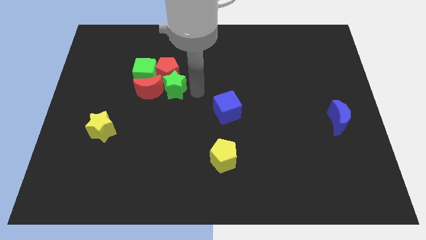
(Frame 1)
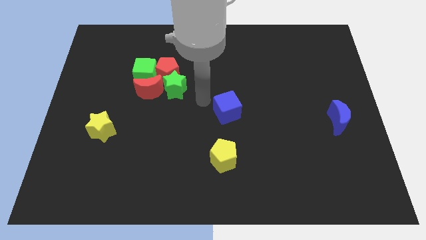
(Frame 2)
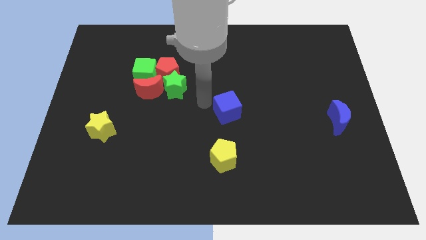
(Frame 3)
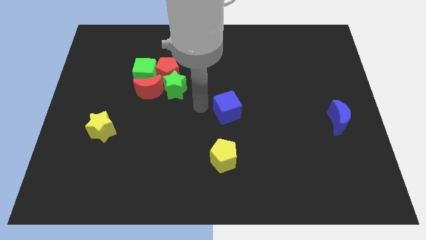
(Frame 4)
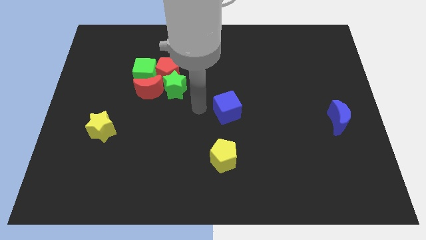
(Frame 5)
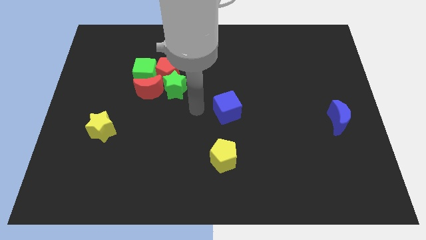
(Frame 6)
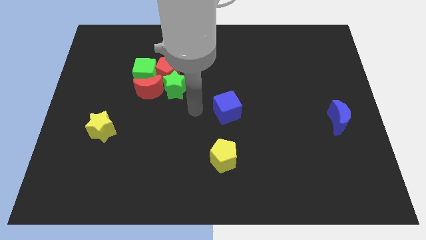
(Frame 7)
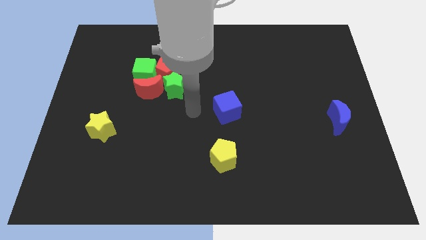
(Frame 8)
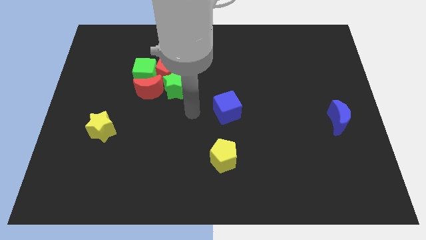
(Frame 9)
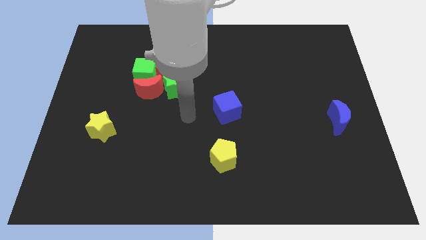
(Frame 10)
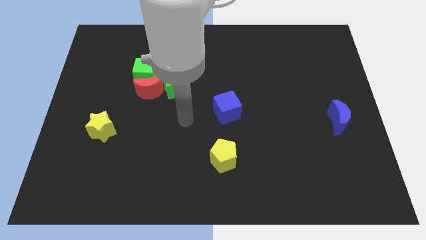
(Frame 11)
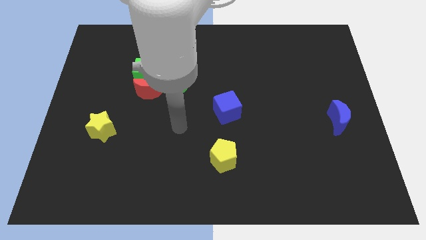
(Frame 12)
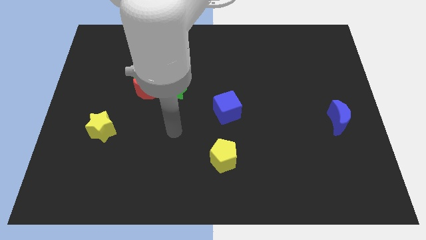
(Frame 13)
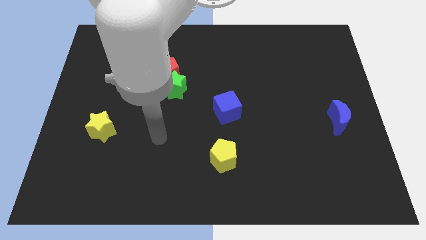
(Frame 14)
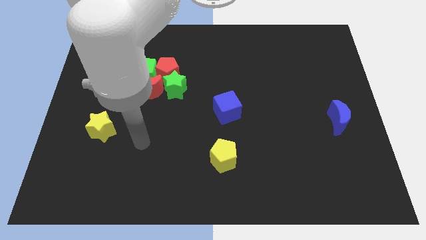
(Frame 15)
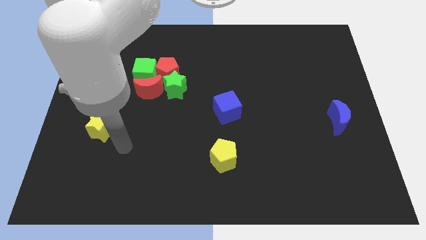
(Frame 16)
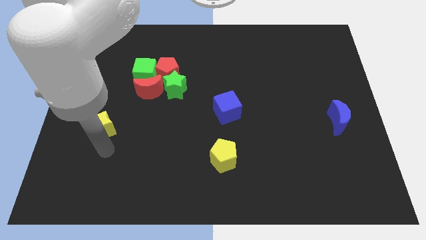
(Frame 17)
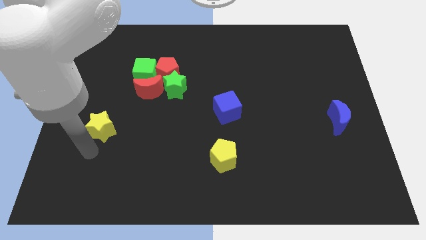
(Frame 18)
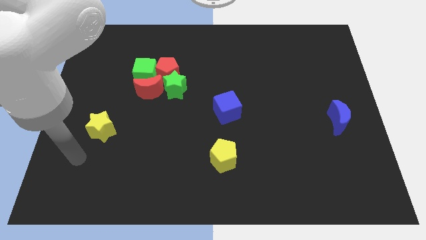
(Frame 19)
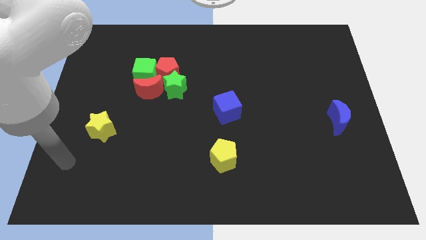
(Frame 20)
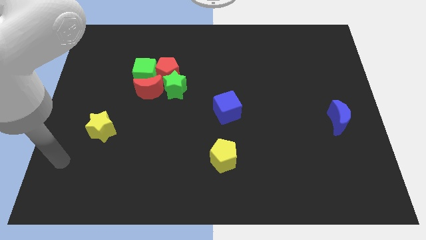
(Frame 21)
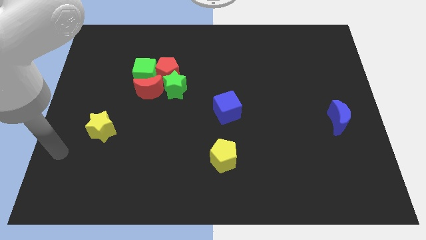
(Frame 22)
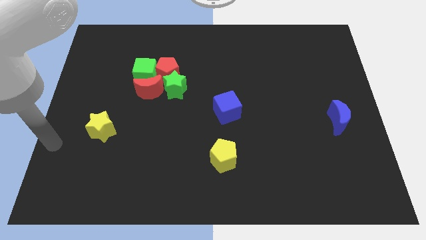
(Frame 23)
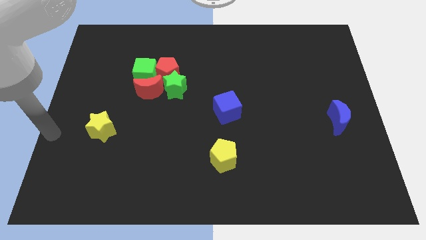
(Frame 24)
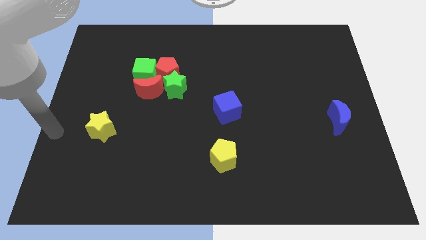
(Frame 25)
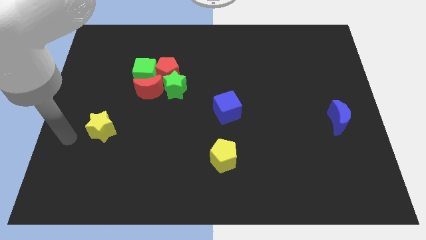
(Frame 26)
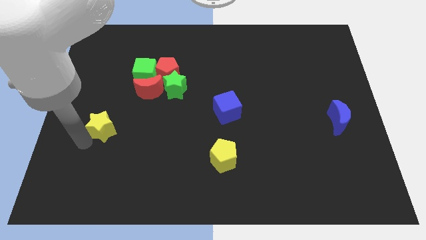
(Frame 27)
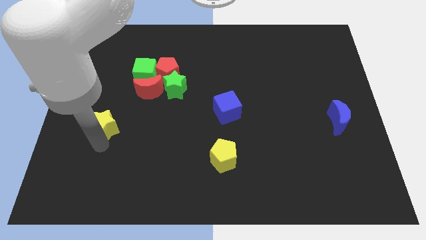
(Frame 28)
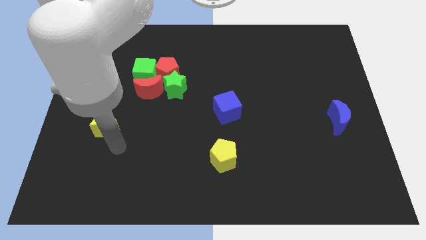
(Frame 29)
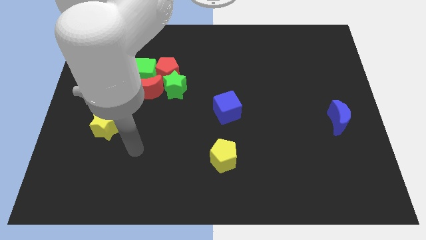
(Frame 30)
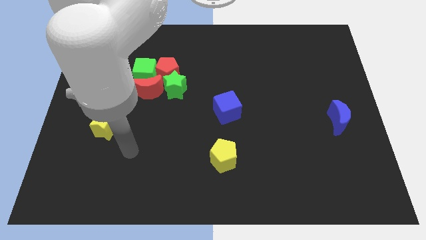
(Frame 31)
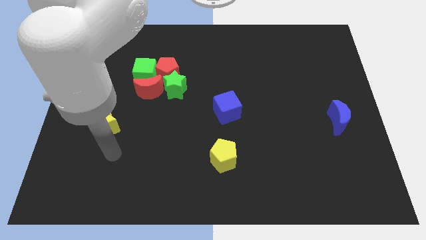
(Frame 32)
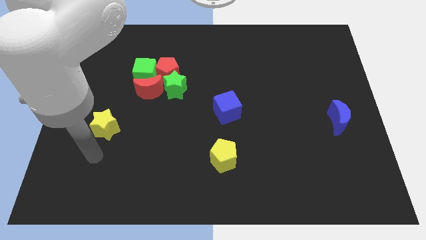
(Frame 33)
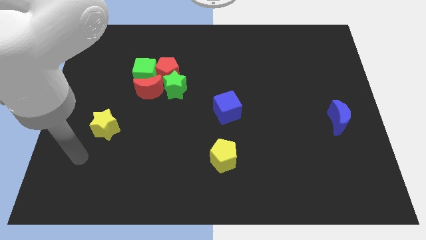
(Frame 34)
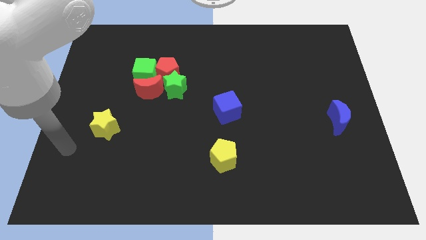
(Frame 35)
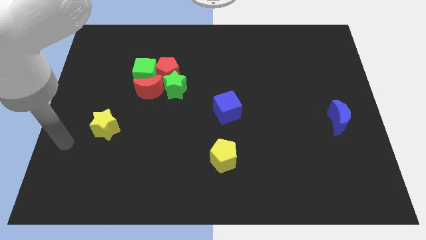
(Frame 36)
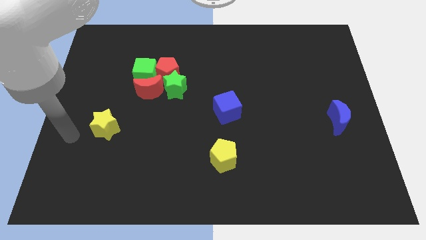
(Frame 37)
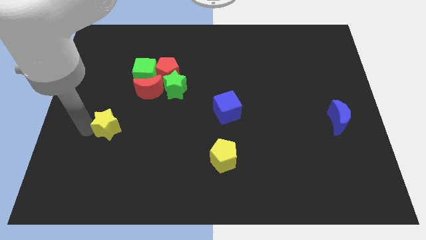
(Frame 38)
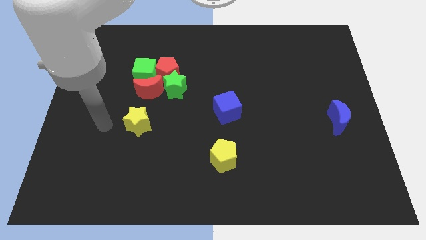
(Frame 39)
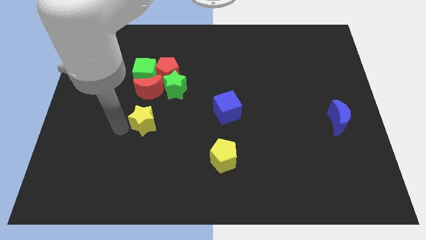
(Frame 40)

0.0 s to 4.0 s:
move the yellow star towards the group of blocks

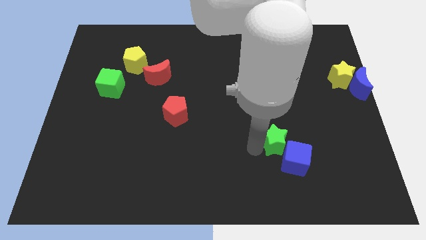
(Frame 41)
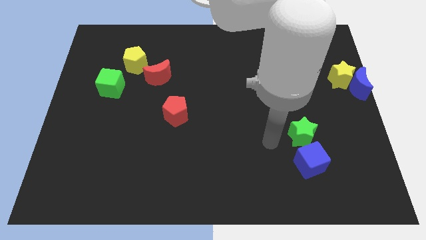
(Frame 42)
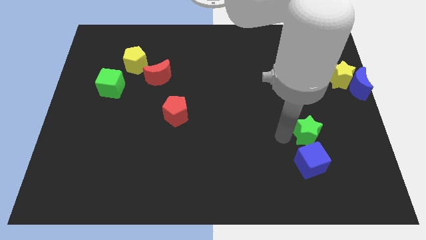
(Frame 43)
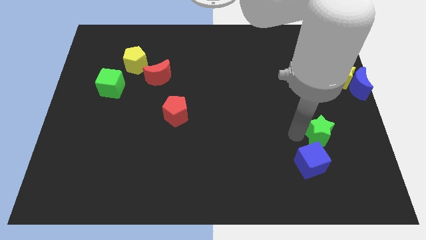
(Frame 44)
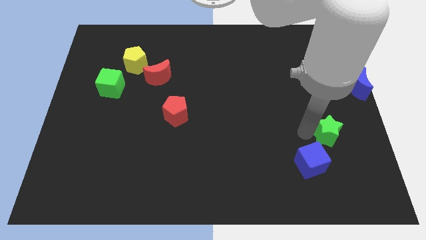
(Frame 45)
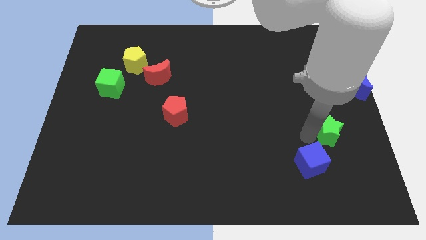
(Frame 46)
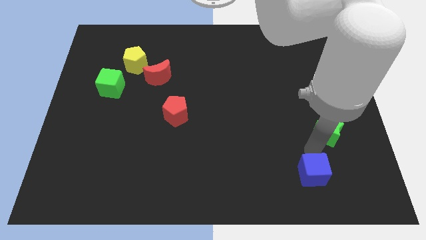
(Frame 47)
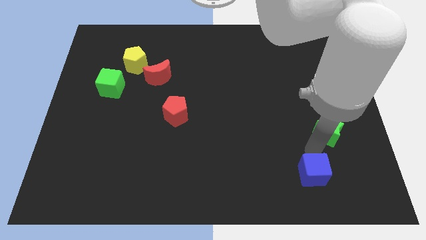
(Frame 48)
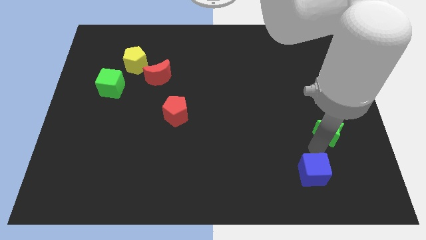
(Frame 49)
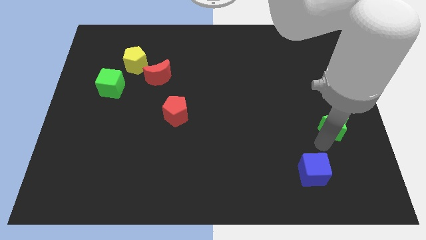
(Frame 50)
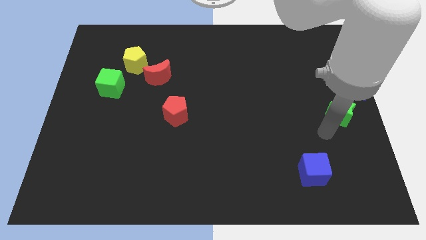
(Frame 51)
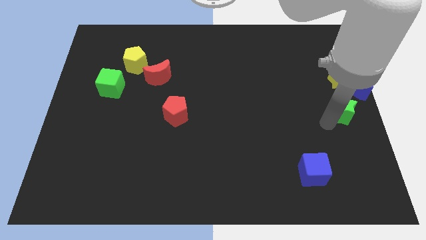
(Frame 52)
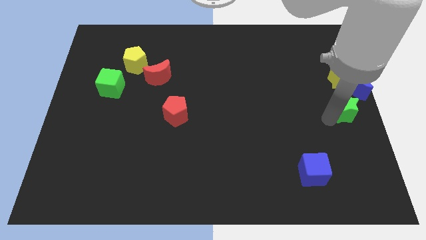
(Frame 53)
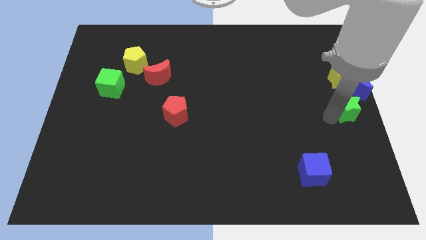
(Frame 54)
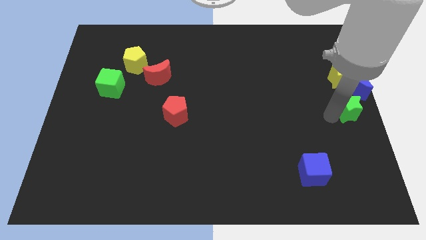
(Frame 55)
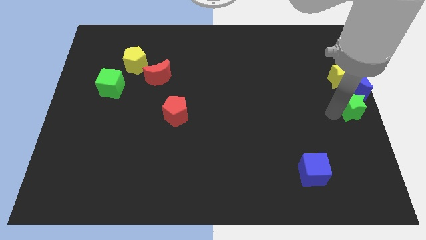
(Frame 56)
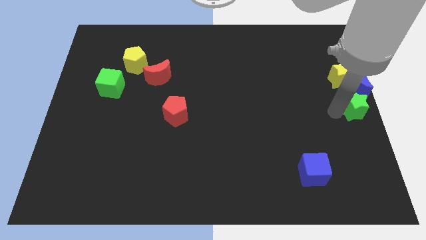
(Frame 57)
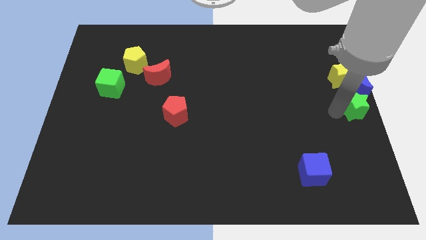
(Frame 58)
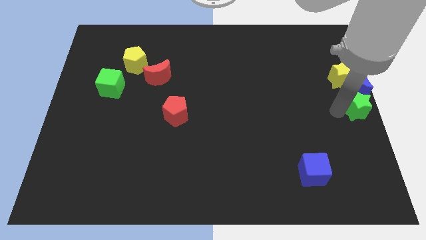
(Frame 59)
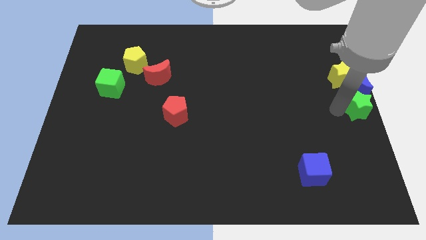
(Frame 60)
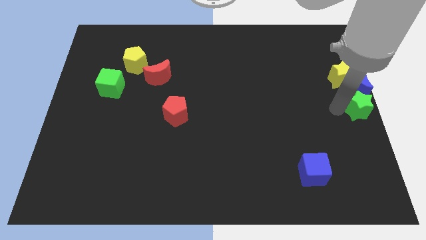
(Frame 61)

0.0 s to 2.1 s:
slide the green star below the blue crescent

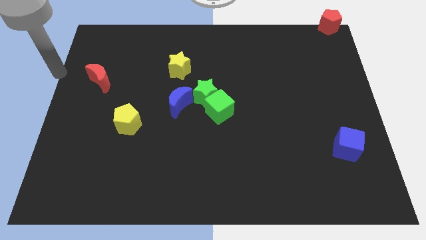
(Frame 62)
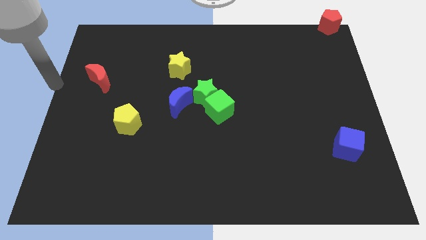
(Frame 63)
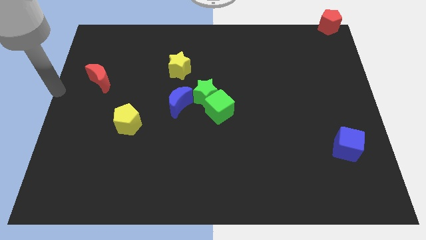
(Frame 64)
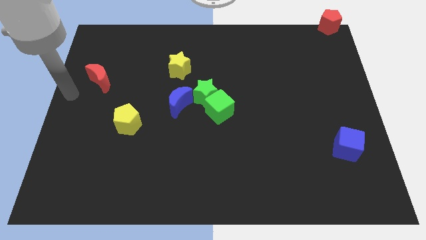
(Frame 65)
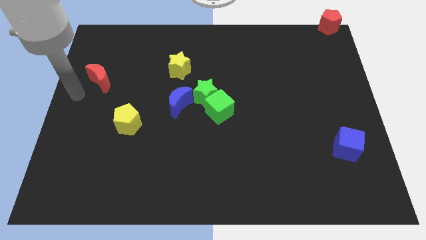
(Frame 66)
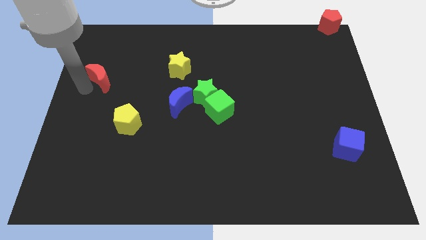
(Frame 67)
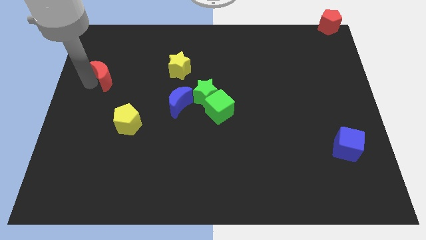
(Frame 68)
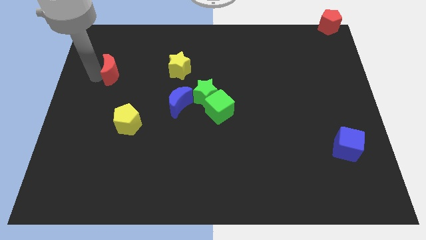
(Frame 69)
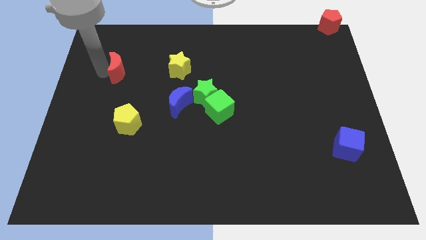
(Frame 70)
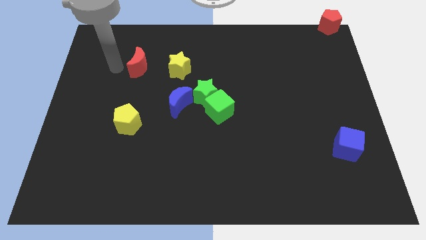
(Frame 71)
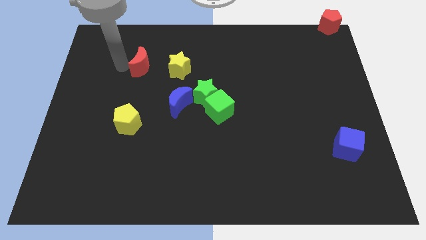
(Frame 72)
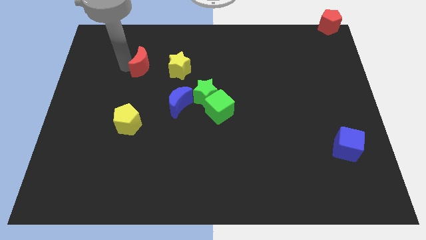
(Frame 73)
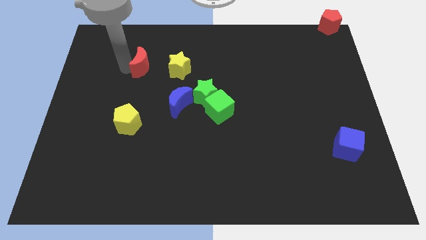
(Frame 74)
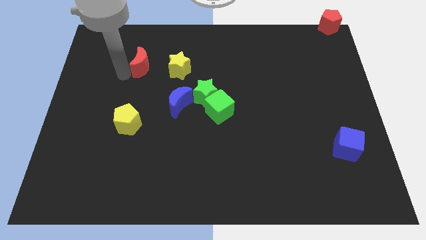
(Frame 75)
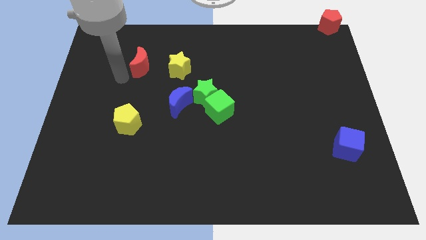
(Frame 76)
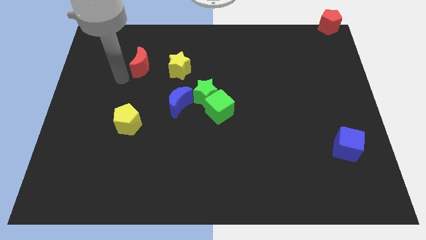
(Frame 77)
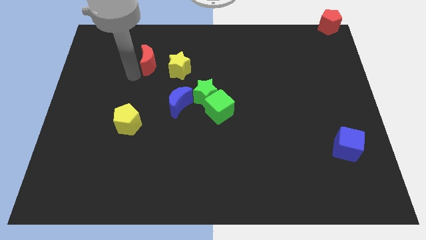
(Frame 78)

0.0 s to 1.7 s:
move the red moon to the left of the yellow star

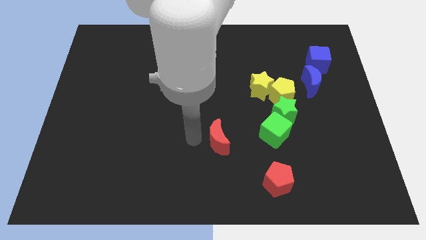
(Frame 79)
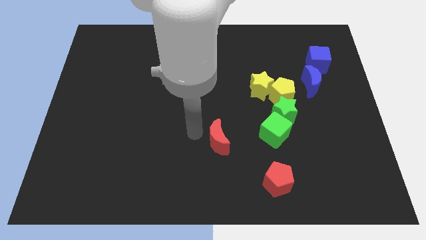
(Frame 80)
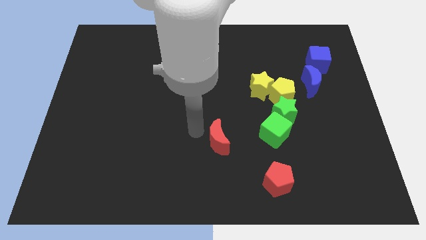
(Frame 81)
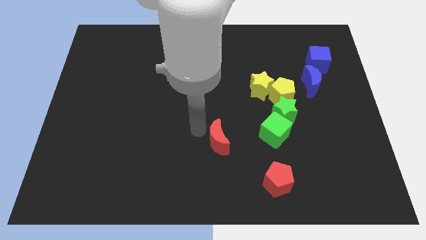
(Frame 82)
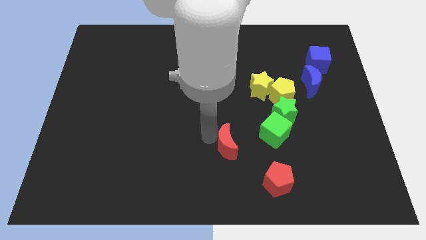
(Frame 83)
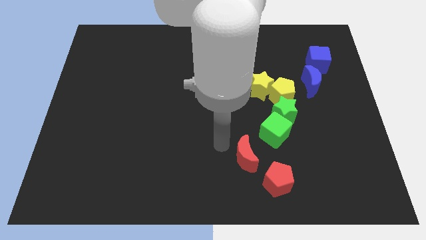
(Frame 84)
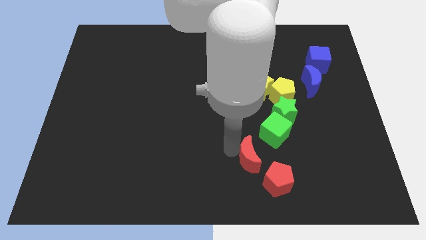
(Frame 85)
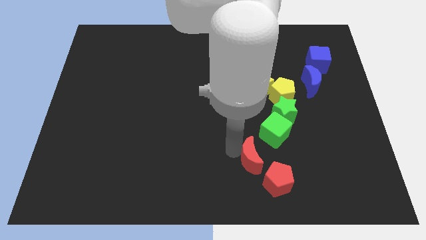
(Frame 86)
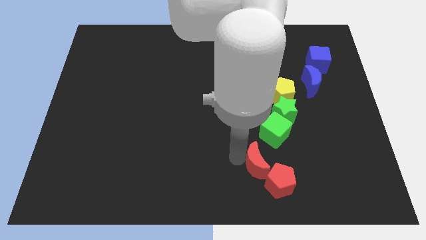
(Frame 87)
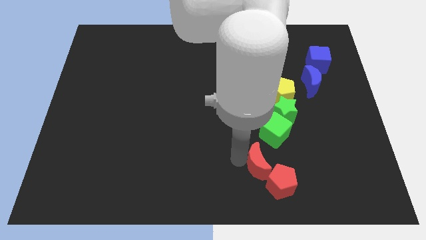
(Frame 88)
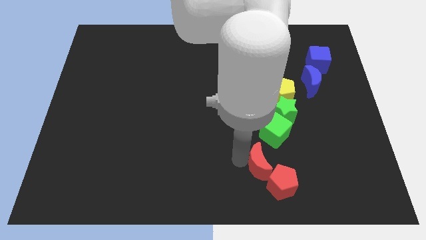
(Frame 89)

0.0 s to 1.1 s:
push the red moon left above the red pentagon
